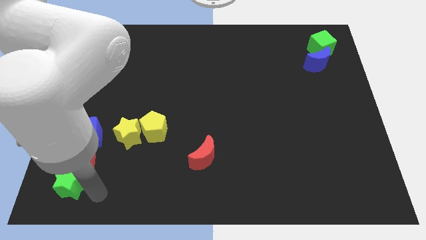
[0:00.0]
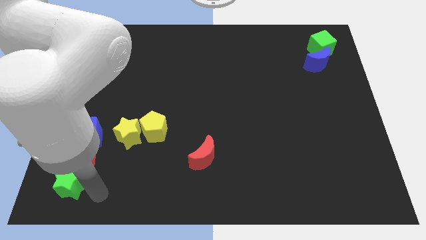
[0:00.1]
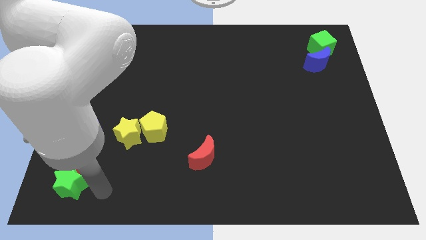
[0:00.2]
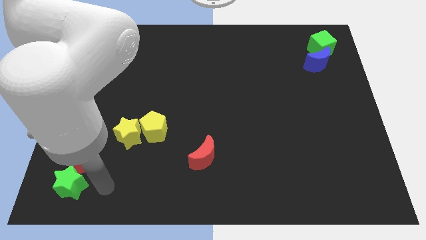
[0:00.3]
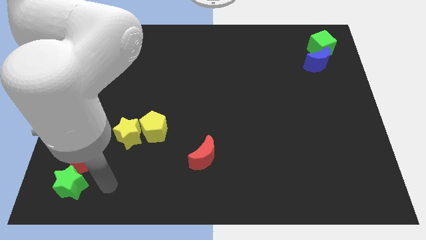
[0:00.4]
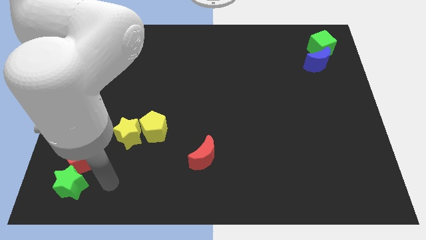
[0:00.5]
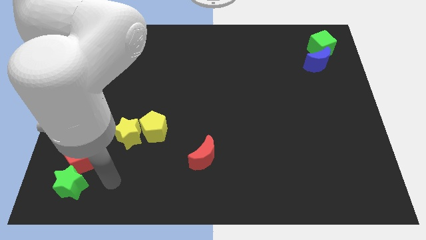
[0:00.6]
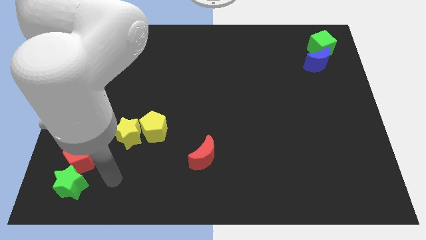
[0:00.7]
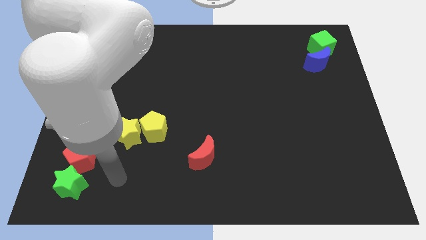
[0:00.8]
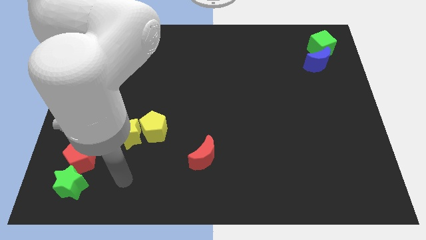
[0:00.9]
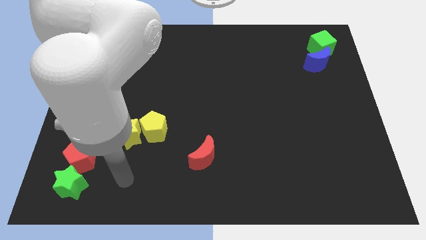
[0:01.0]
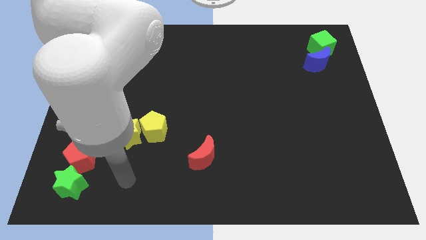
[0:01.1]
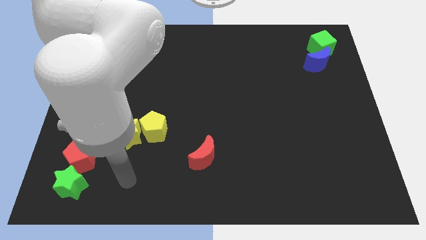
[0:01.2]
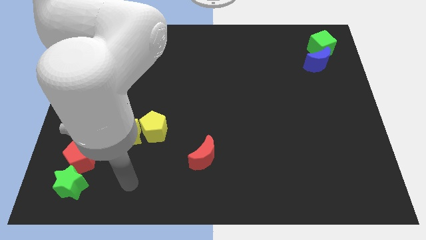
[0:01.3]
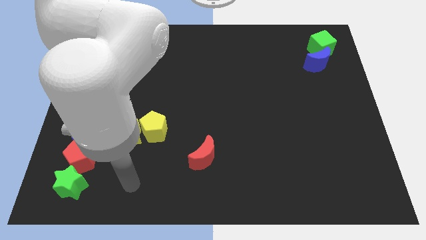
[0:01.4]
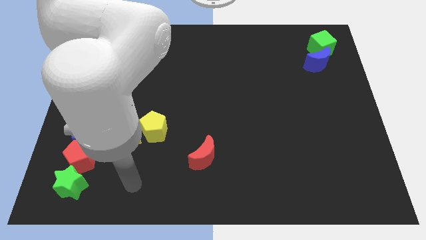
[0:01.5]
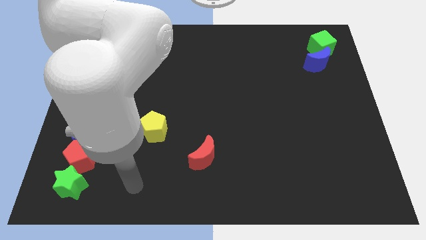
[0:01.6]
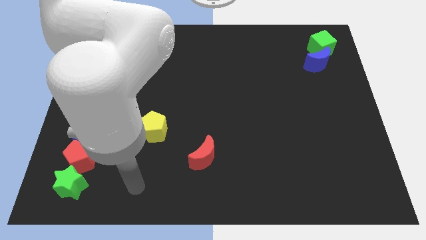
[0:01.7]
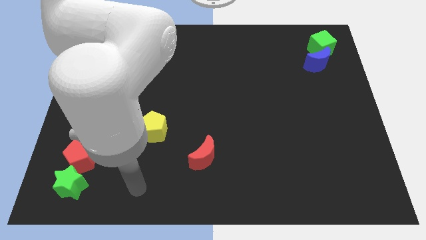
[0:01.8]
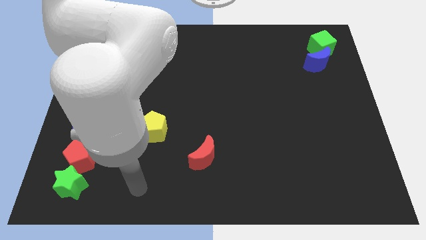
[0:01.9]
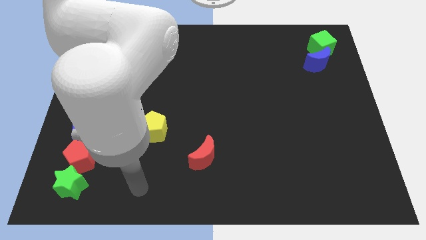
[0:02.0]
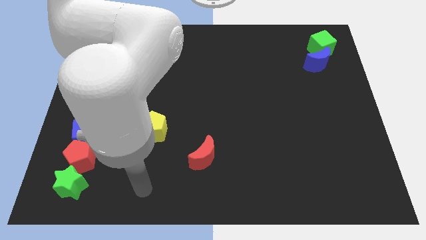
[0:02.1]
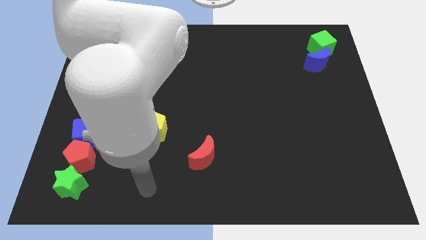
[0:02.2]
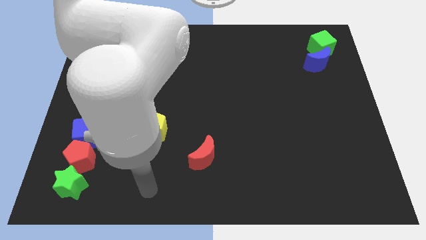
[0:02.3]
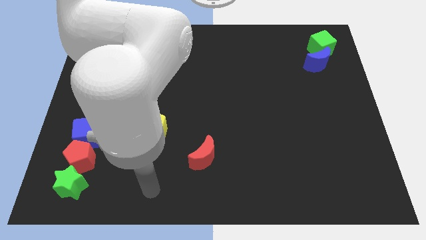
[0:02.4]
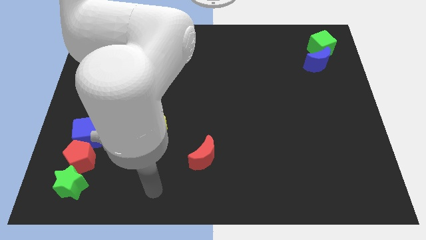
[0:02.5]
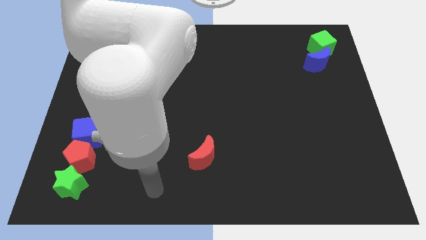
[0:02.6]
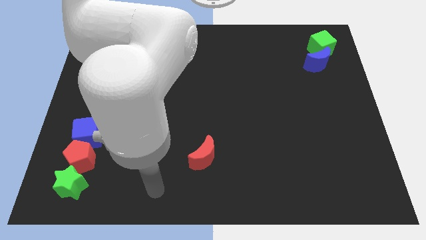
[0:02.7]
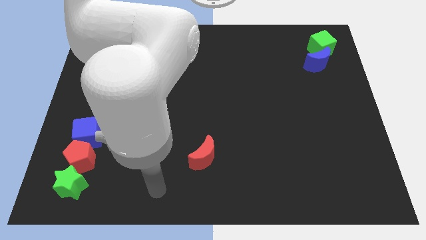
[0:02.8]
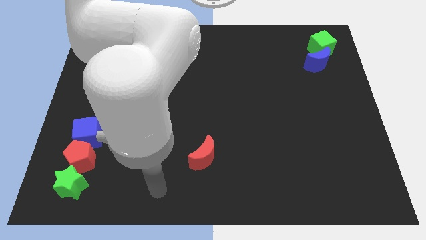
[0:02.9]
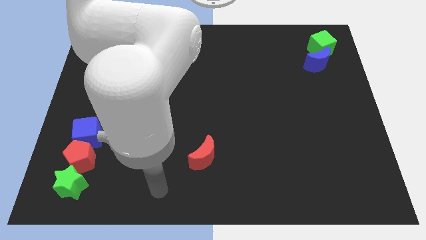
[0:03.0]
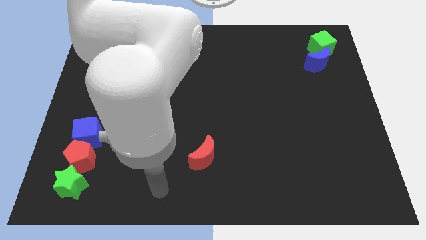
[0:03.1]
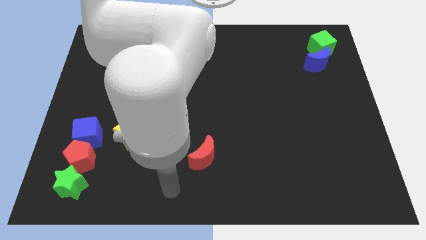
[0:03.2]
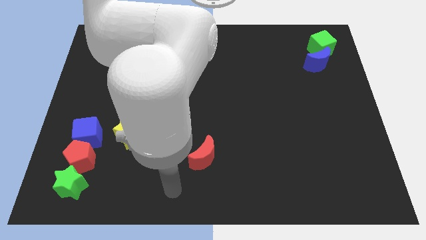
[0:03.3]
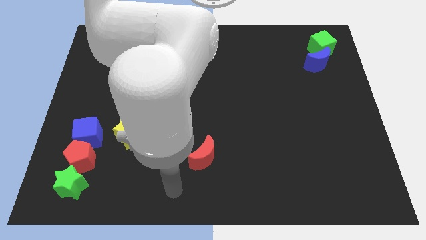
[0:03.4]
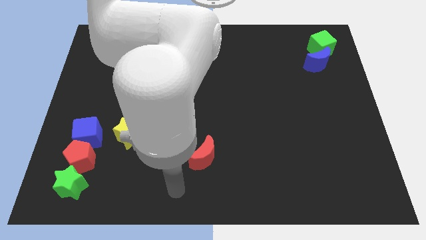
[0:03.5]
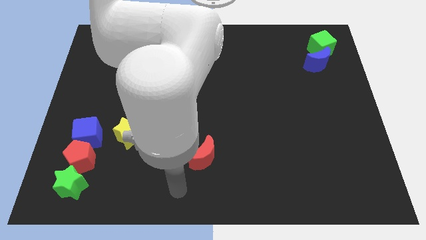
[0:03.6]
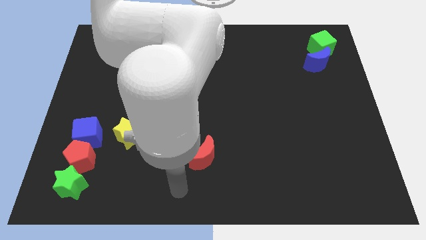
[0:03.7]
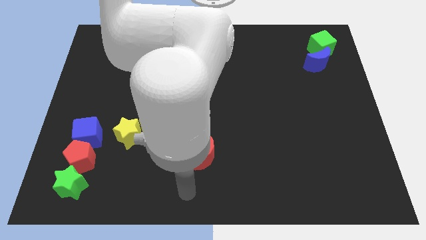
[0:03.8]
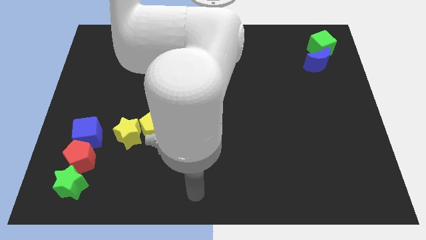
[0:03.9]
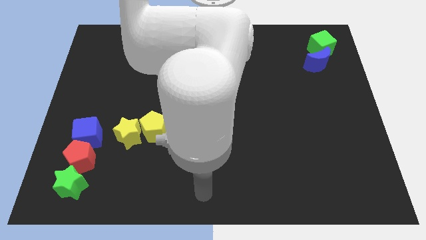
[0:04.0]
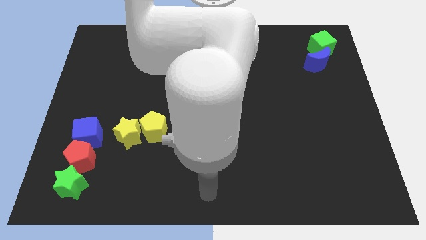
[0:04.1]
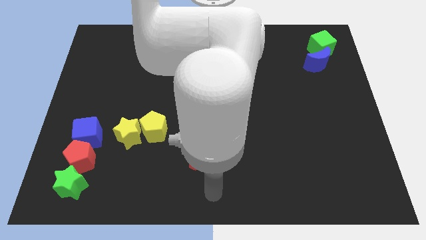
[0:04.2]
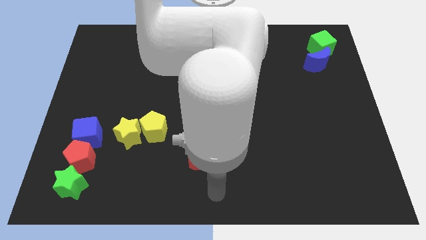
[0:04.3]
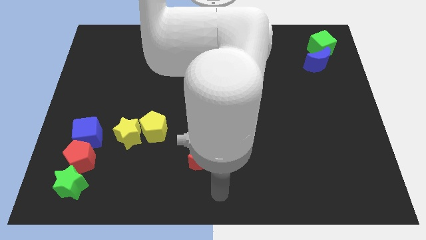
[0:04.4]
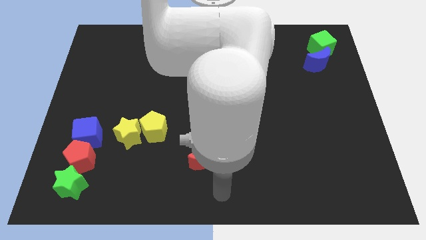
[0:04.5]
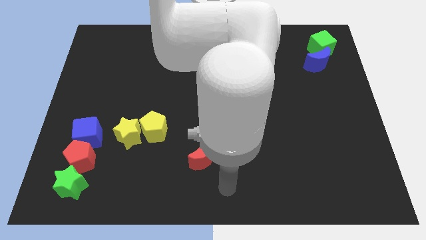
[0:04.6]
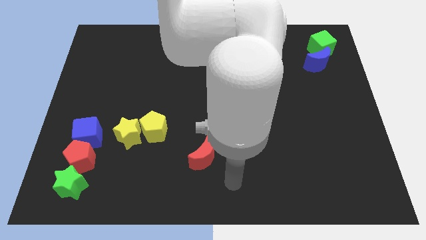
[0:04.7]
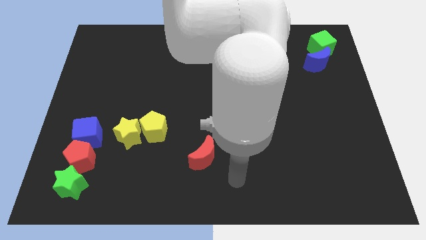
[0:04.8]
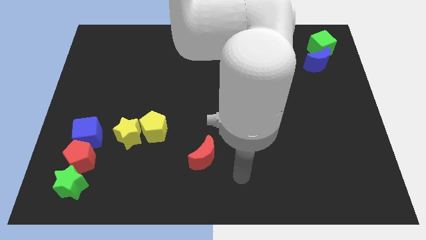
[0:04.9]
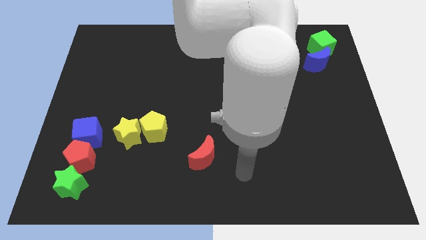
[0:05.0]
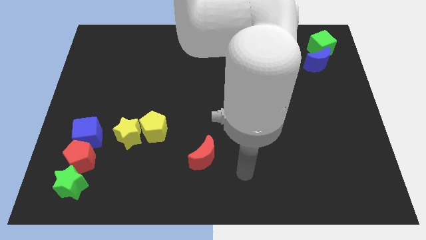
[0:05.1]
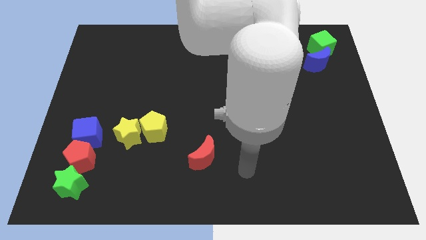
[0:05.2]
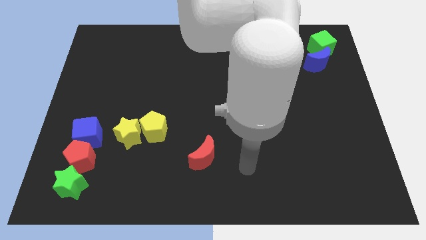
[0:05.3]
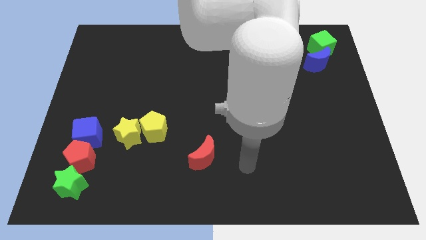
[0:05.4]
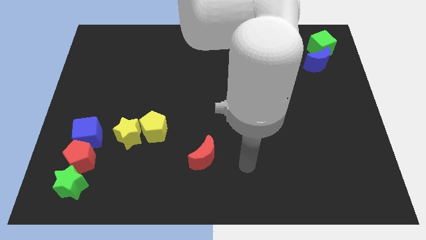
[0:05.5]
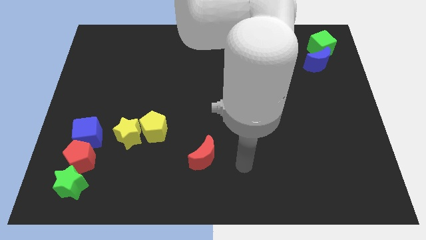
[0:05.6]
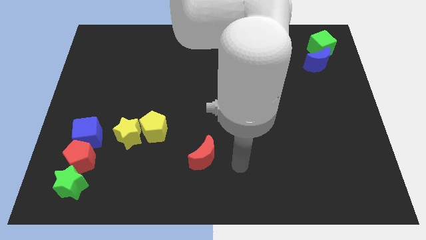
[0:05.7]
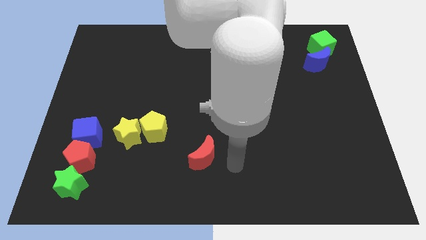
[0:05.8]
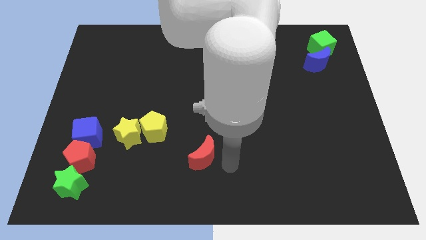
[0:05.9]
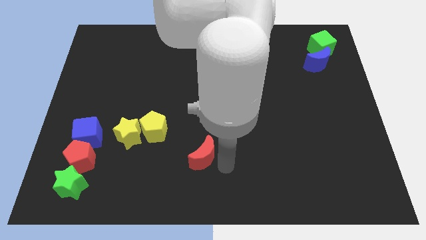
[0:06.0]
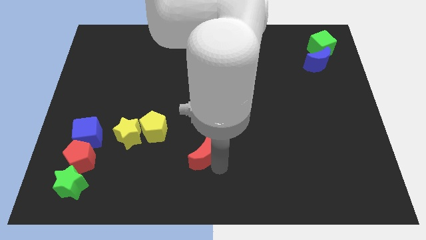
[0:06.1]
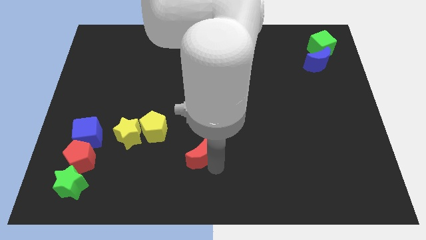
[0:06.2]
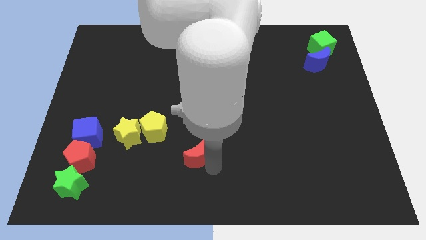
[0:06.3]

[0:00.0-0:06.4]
move your arm to the red moon

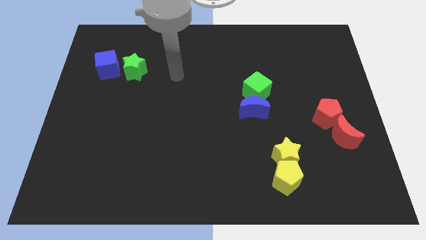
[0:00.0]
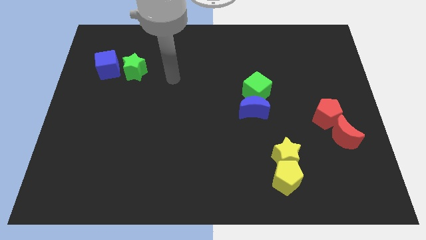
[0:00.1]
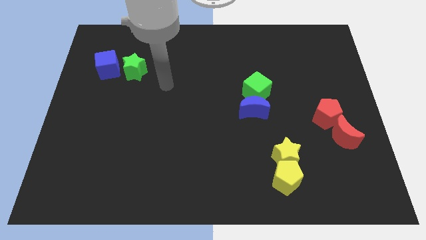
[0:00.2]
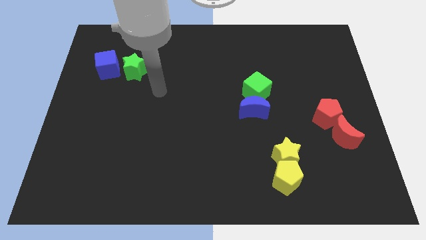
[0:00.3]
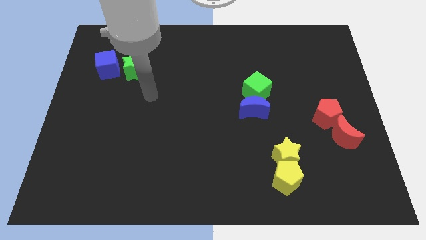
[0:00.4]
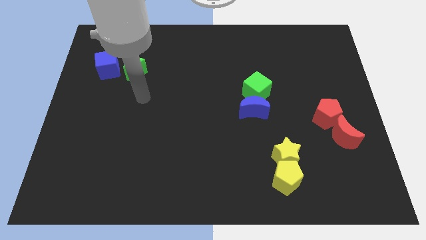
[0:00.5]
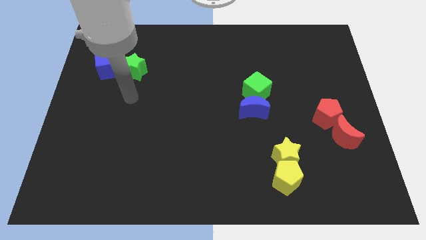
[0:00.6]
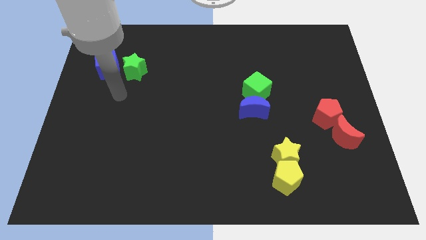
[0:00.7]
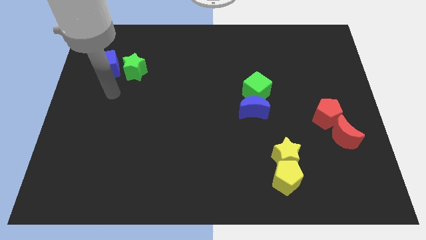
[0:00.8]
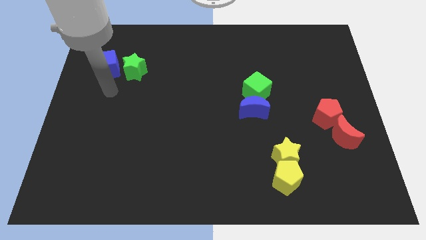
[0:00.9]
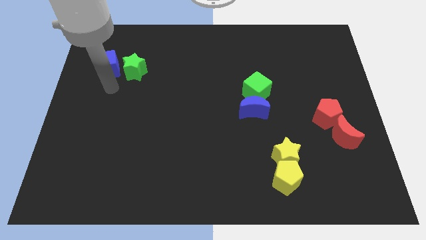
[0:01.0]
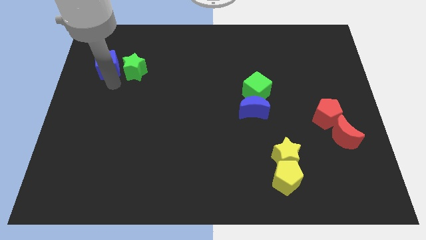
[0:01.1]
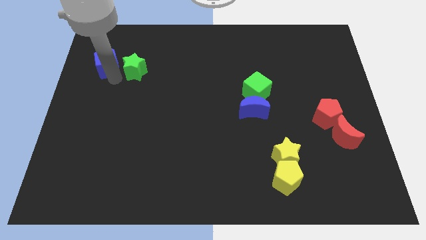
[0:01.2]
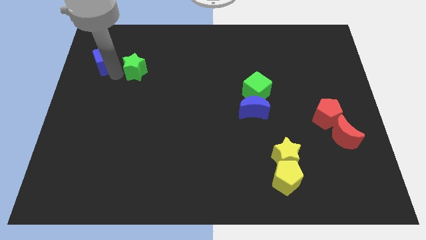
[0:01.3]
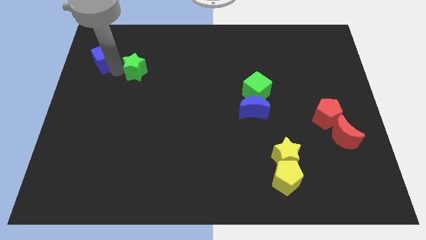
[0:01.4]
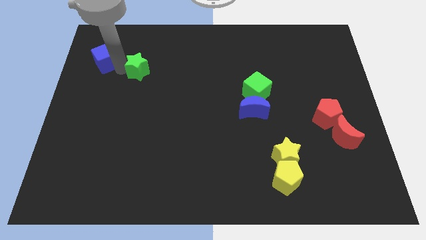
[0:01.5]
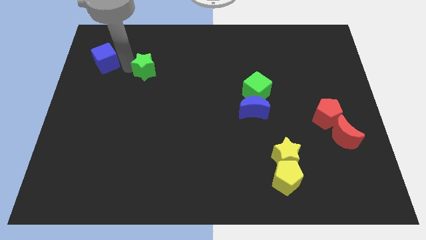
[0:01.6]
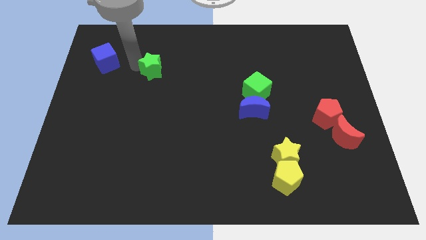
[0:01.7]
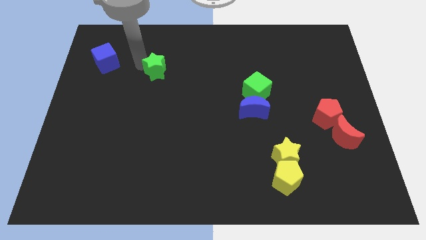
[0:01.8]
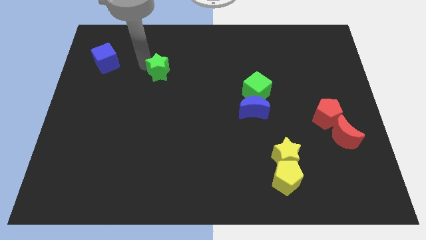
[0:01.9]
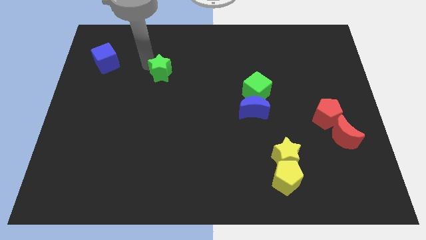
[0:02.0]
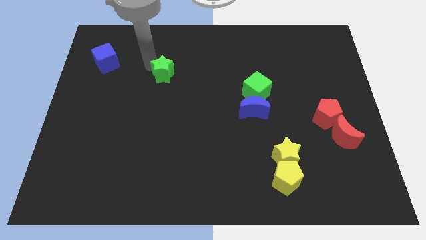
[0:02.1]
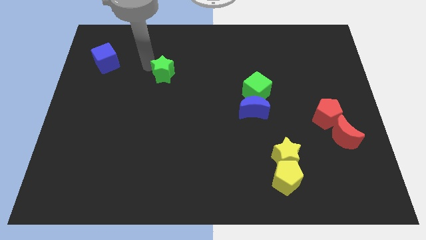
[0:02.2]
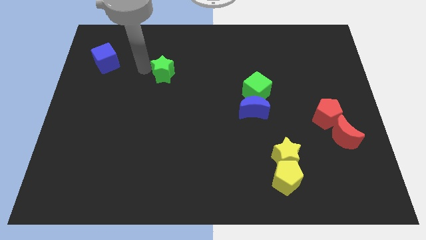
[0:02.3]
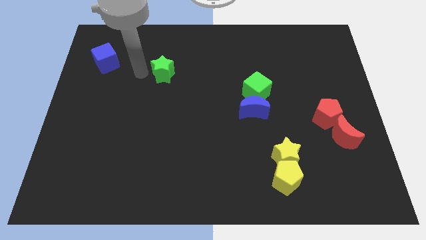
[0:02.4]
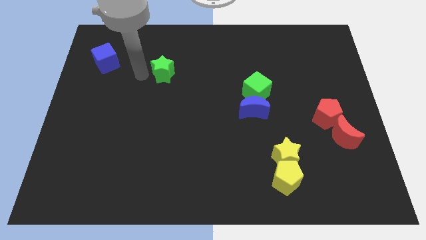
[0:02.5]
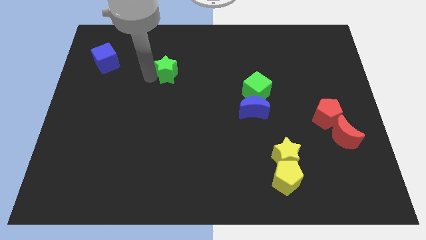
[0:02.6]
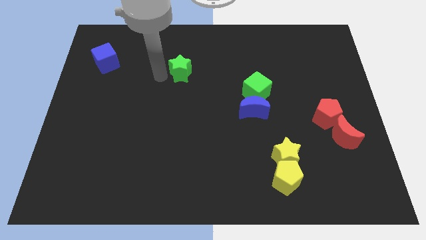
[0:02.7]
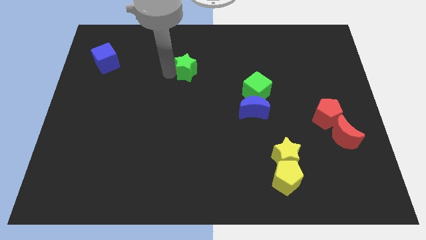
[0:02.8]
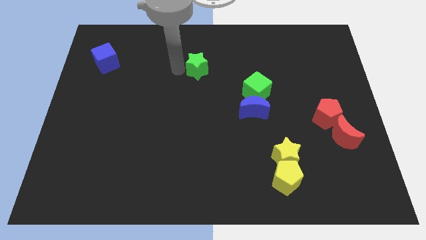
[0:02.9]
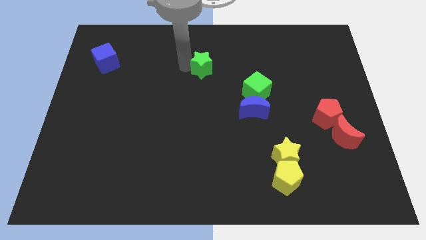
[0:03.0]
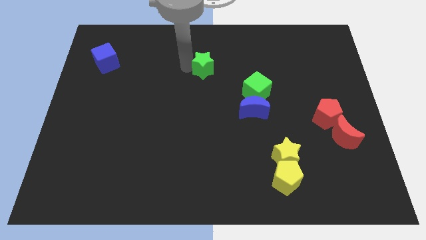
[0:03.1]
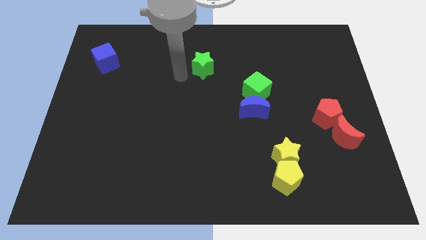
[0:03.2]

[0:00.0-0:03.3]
place the green star diagonally to green cube
